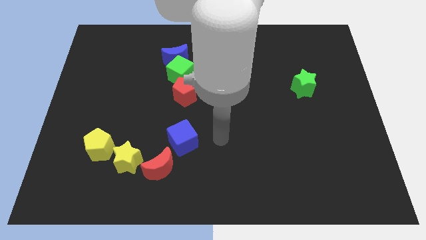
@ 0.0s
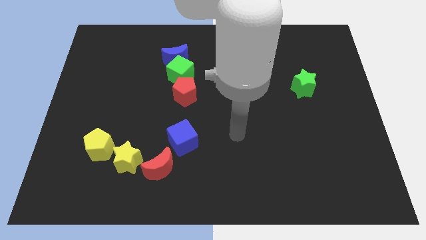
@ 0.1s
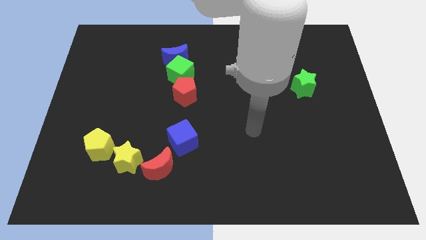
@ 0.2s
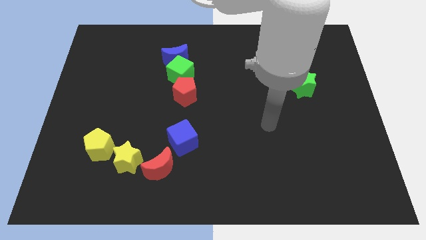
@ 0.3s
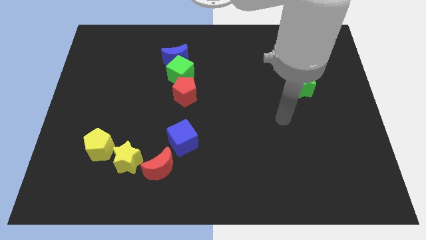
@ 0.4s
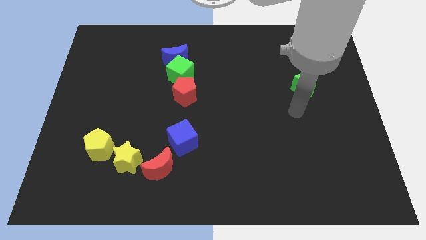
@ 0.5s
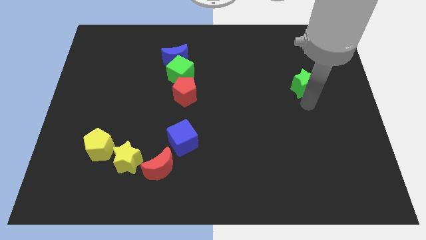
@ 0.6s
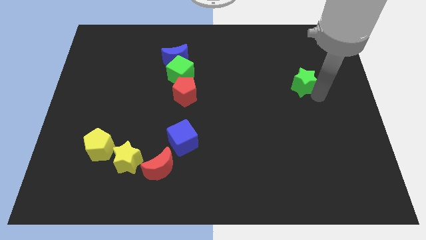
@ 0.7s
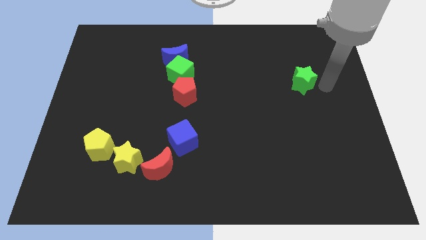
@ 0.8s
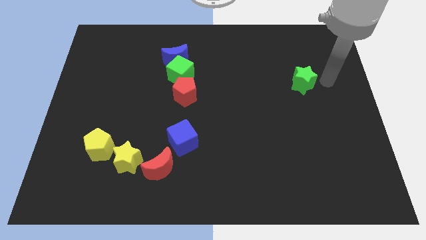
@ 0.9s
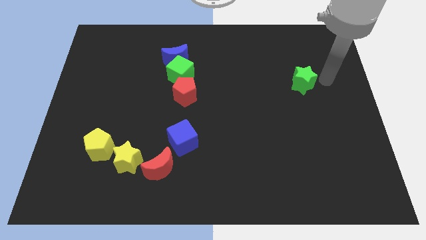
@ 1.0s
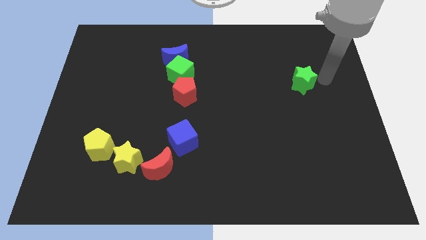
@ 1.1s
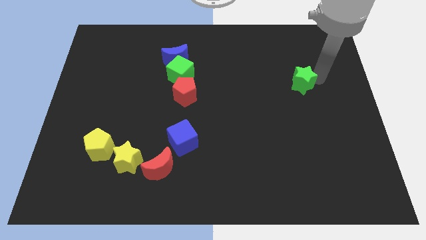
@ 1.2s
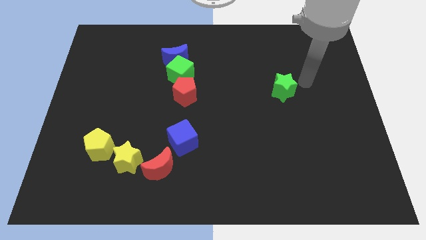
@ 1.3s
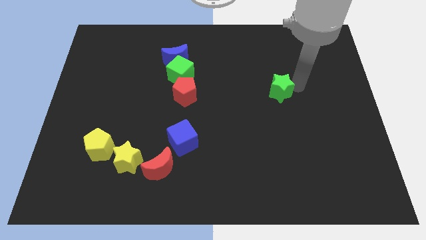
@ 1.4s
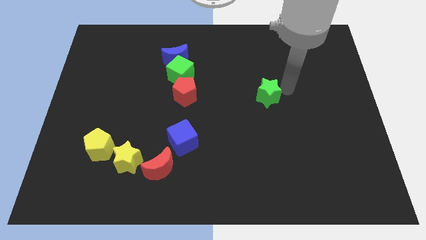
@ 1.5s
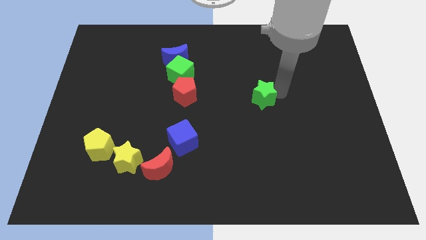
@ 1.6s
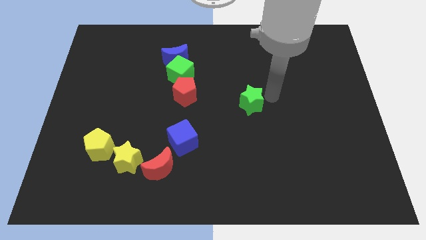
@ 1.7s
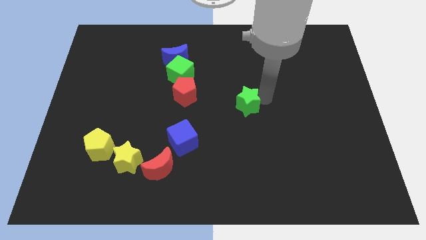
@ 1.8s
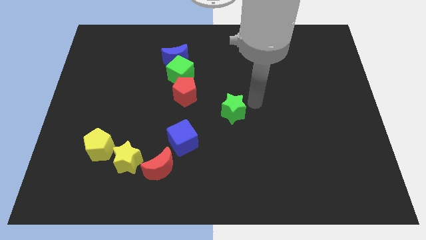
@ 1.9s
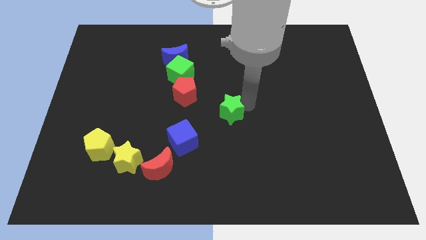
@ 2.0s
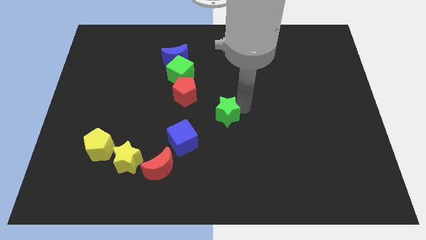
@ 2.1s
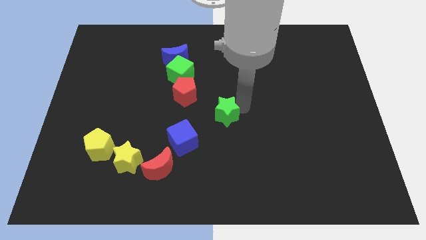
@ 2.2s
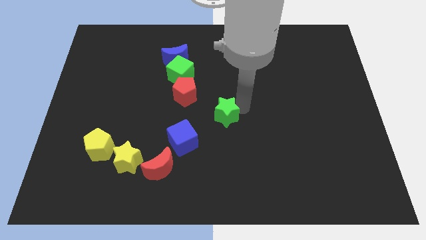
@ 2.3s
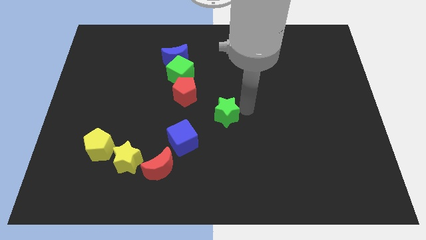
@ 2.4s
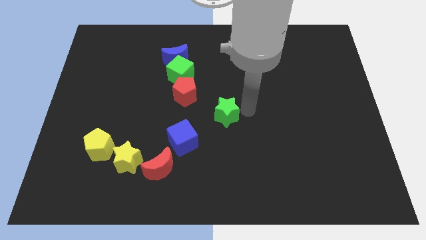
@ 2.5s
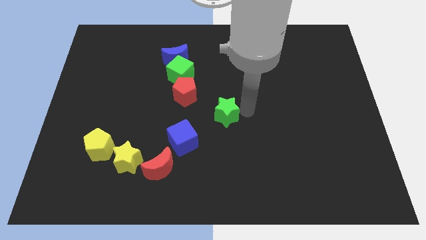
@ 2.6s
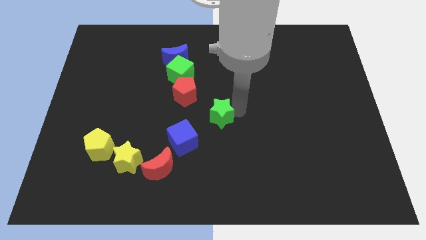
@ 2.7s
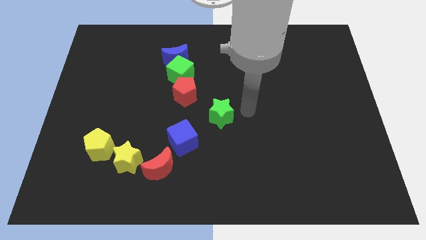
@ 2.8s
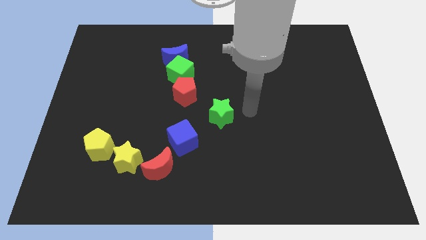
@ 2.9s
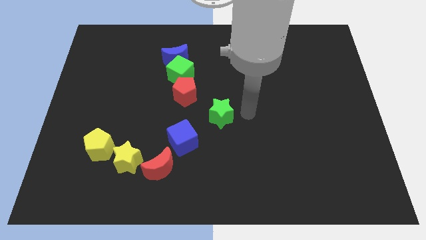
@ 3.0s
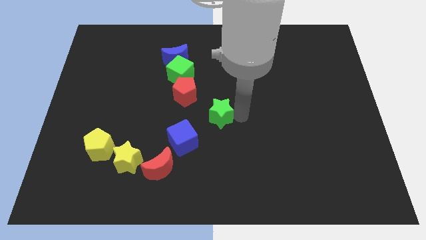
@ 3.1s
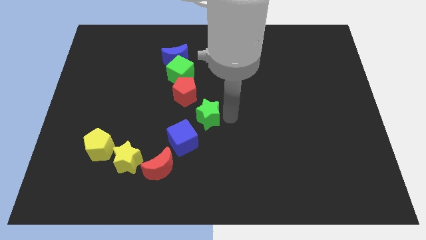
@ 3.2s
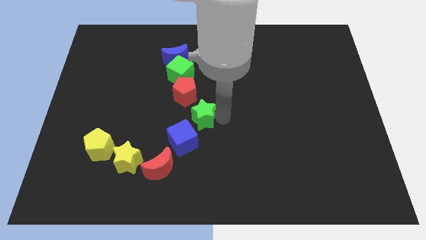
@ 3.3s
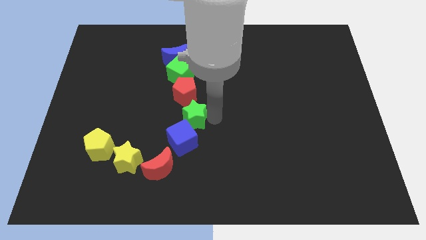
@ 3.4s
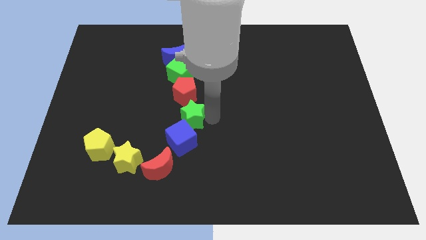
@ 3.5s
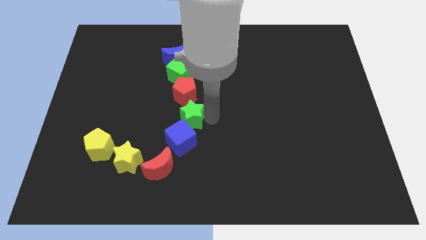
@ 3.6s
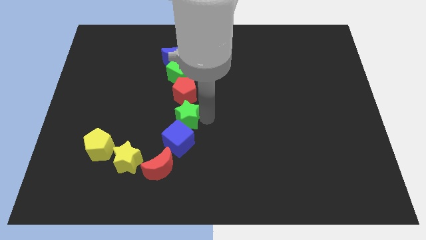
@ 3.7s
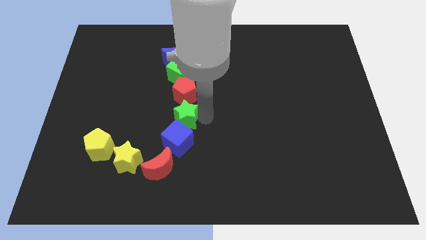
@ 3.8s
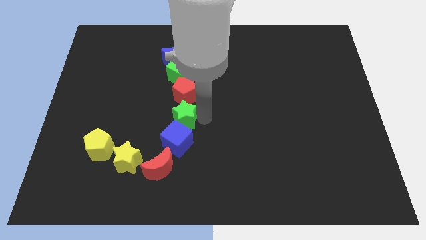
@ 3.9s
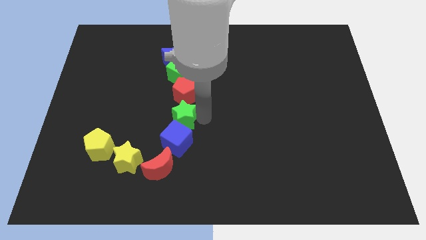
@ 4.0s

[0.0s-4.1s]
push the green star into blue cube

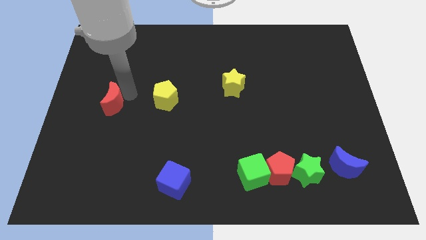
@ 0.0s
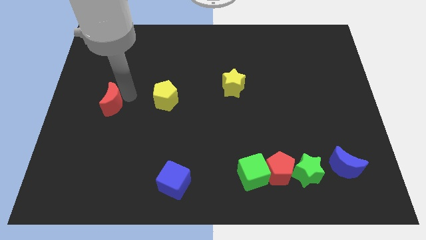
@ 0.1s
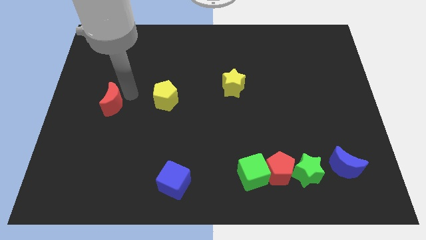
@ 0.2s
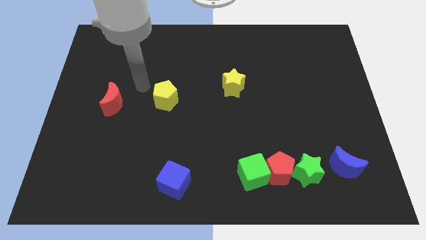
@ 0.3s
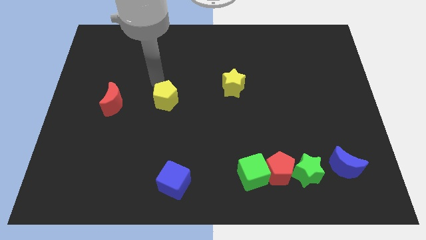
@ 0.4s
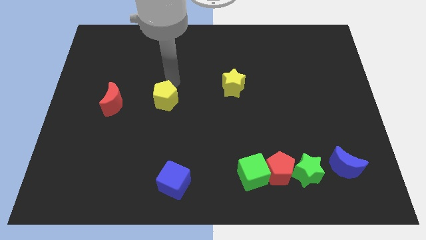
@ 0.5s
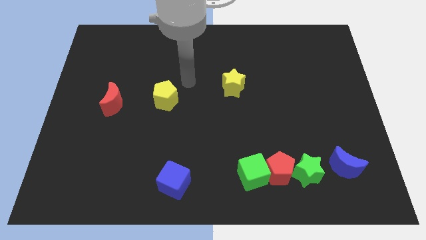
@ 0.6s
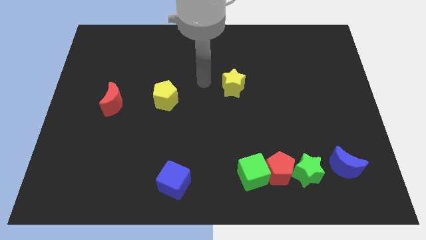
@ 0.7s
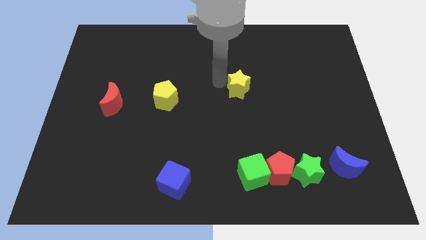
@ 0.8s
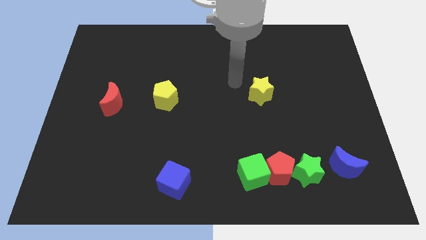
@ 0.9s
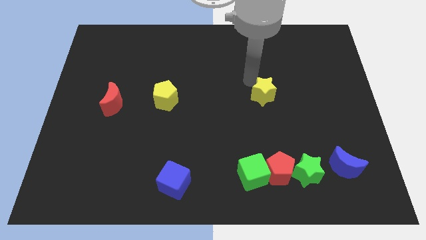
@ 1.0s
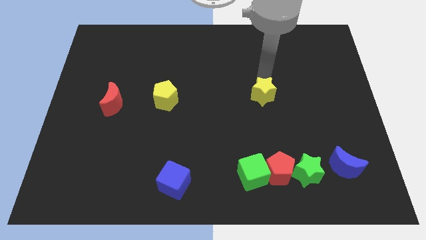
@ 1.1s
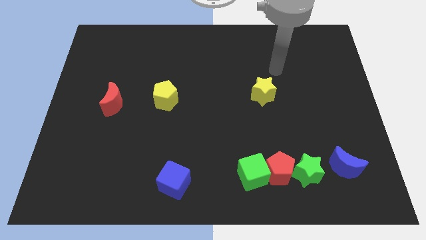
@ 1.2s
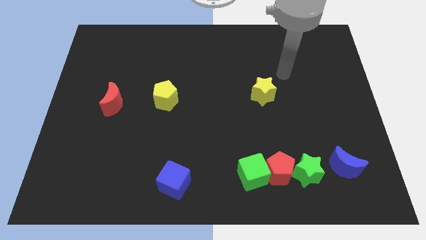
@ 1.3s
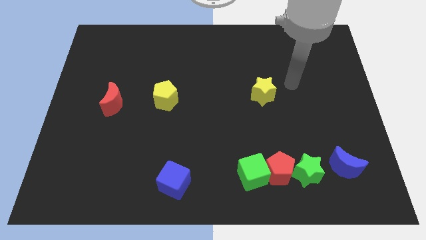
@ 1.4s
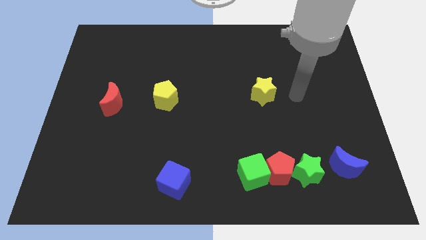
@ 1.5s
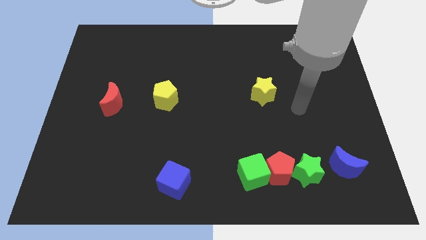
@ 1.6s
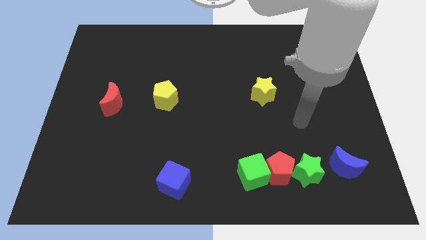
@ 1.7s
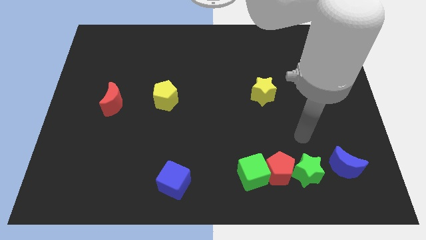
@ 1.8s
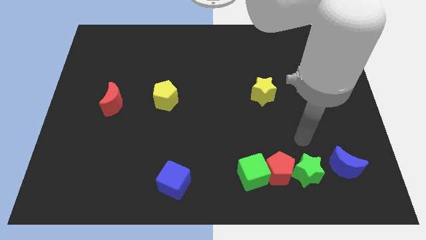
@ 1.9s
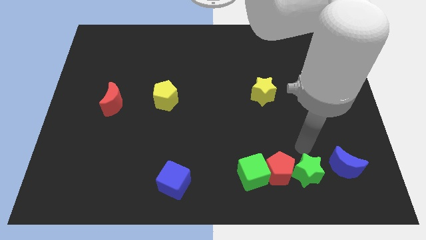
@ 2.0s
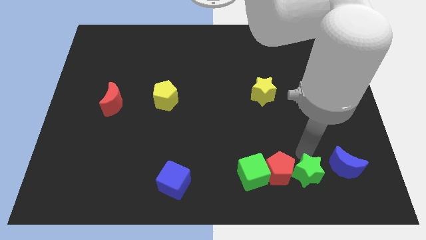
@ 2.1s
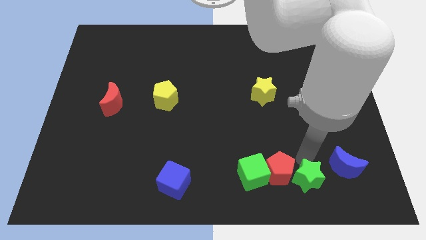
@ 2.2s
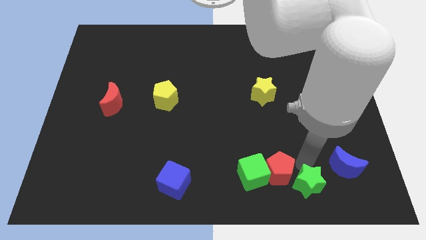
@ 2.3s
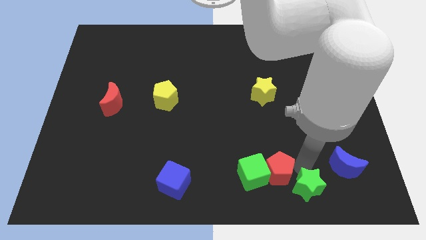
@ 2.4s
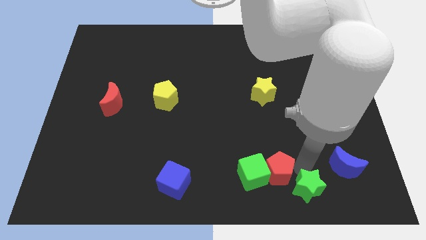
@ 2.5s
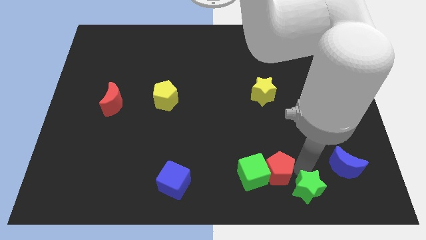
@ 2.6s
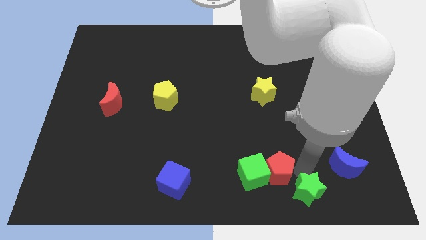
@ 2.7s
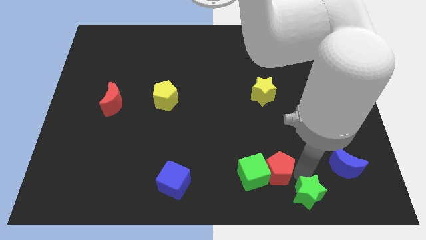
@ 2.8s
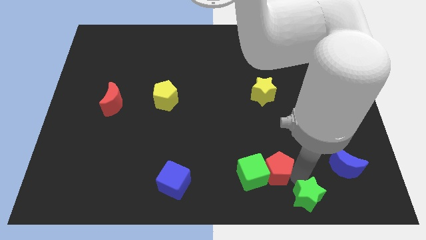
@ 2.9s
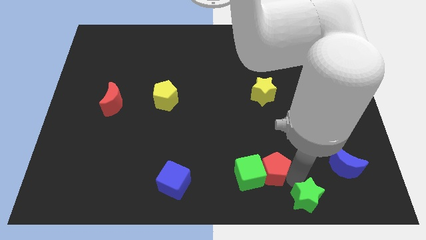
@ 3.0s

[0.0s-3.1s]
go and separate the green star from the red pentagon

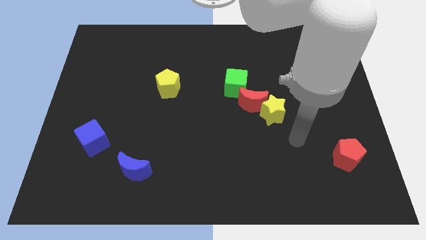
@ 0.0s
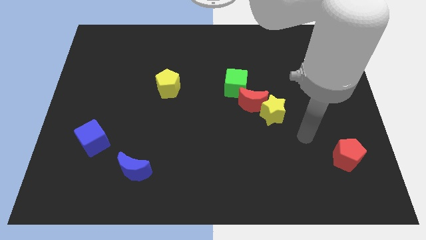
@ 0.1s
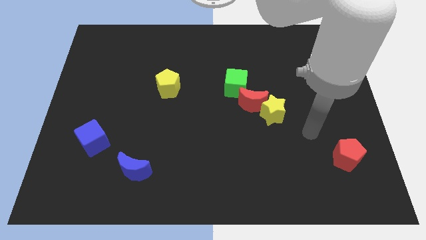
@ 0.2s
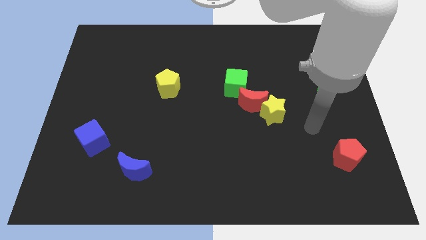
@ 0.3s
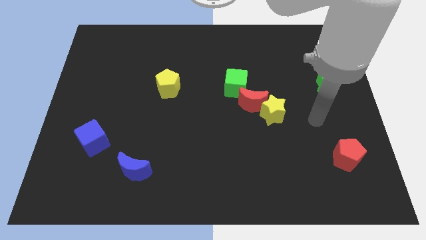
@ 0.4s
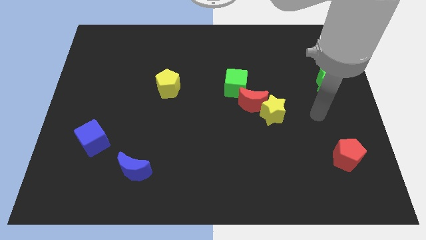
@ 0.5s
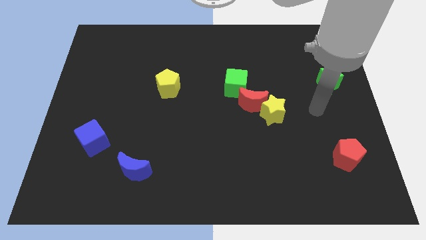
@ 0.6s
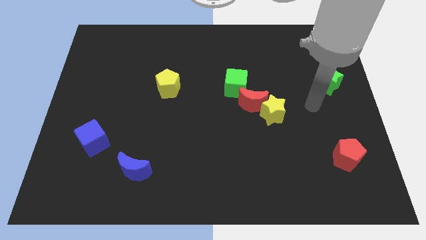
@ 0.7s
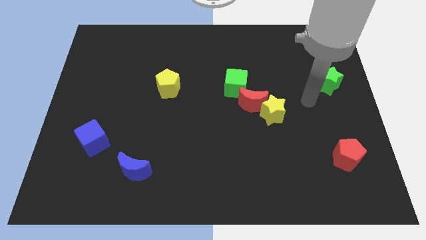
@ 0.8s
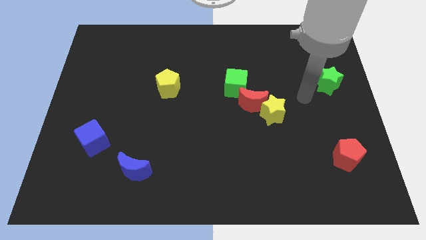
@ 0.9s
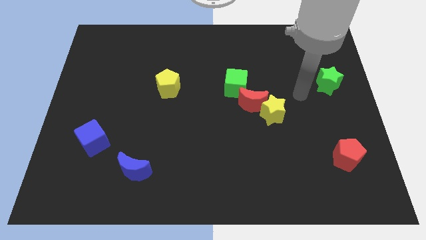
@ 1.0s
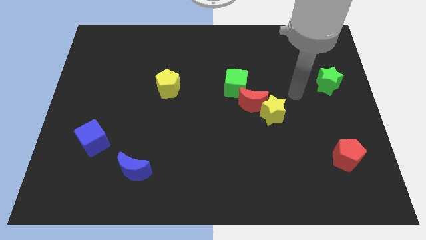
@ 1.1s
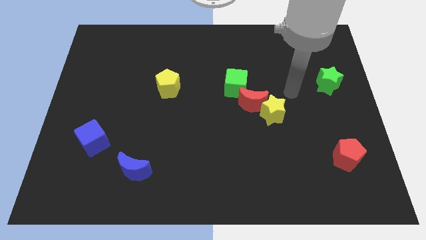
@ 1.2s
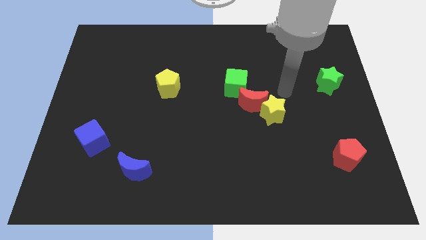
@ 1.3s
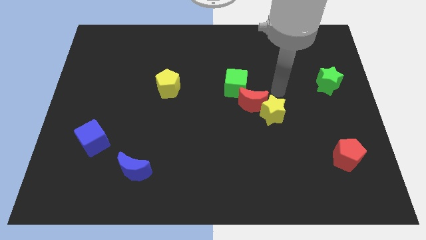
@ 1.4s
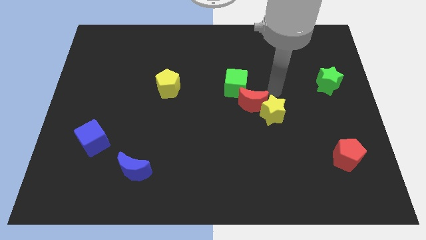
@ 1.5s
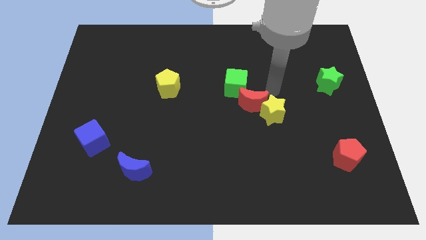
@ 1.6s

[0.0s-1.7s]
point your arm to the top of the yellow star
